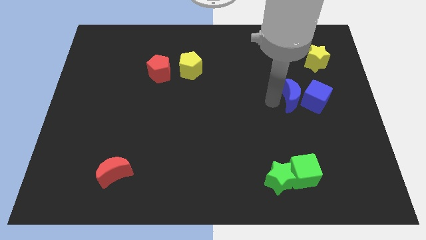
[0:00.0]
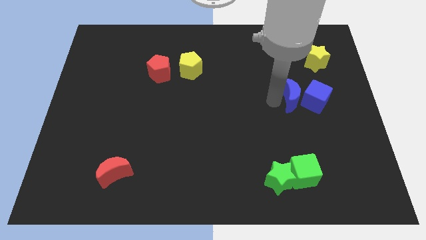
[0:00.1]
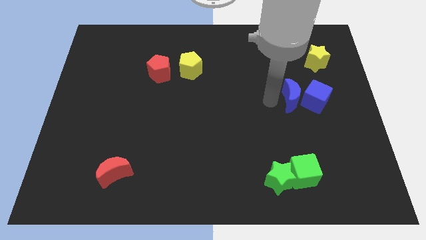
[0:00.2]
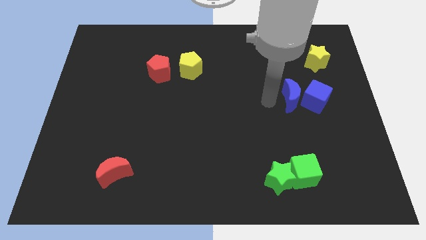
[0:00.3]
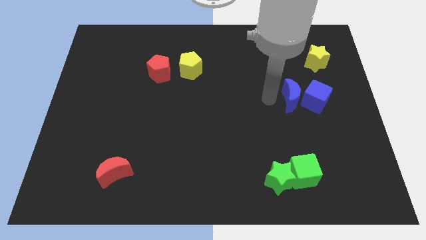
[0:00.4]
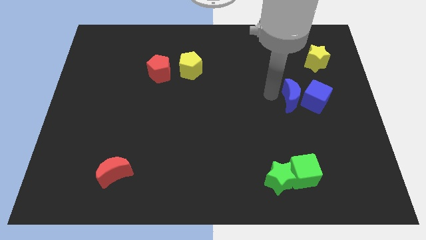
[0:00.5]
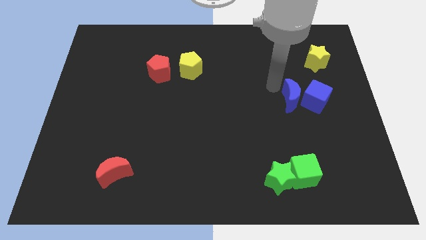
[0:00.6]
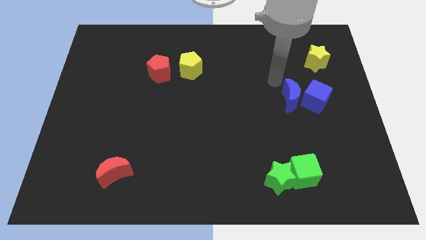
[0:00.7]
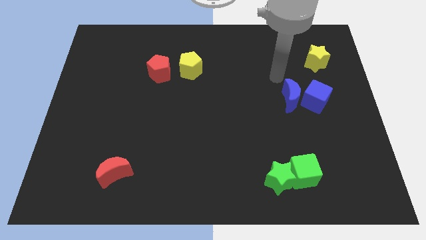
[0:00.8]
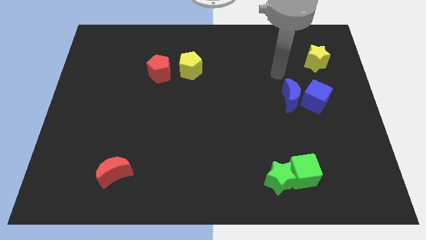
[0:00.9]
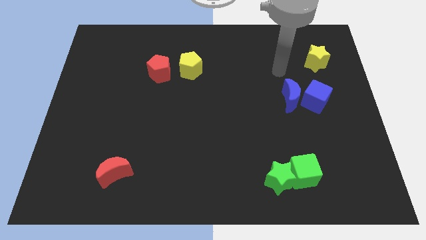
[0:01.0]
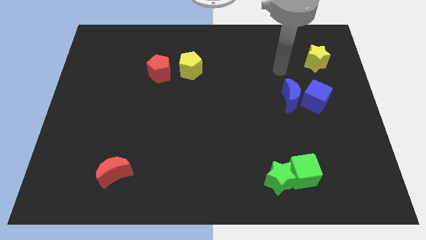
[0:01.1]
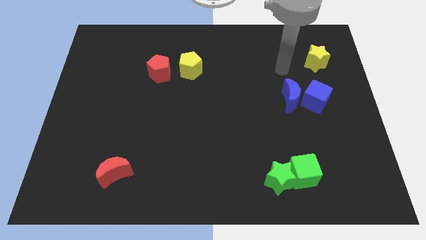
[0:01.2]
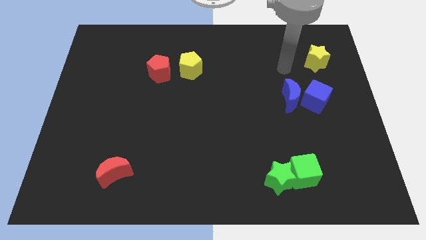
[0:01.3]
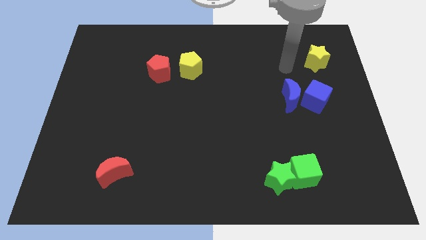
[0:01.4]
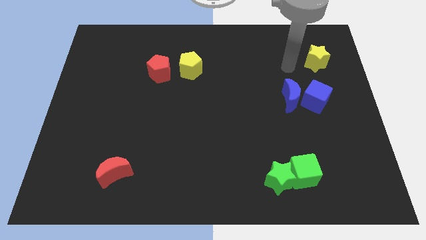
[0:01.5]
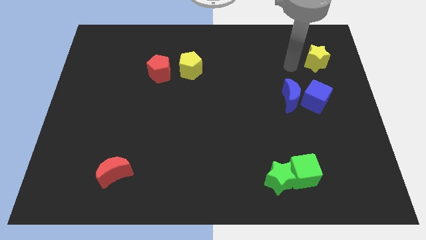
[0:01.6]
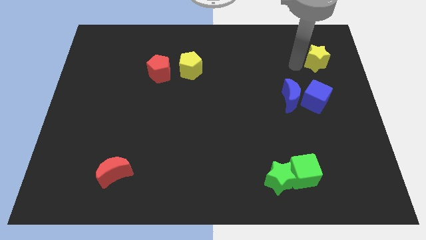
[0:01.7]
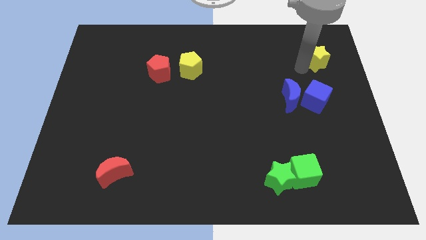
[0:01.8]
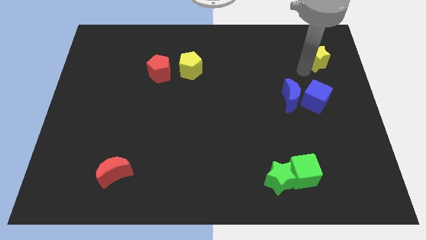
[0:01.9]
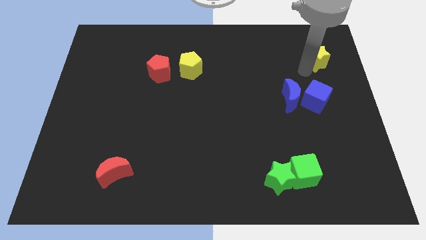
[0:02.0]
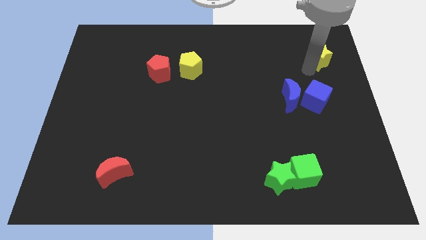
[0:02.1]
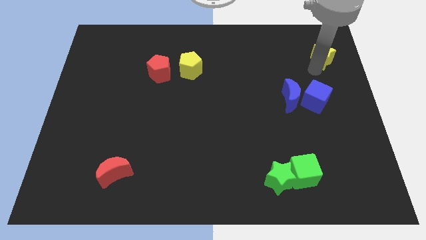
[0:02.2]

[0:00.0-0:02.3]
place your arm below yellow star

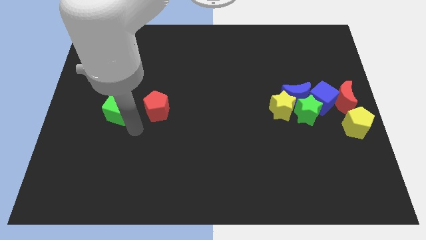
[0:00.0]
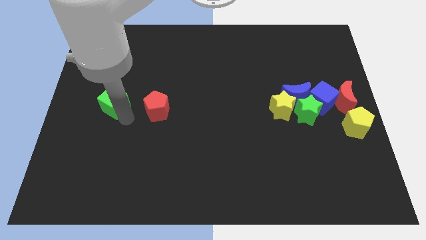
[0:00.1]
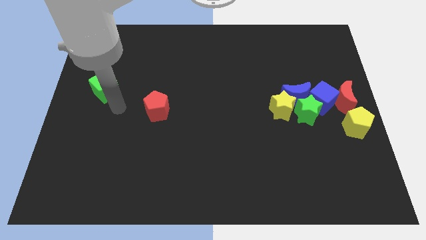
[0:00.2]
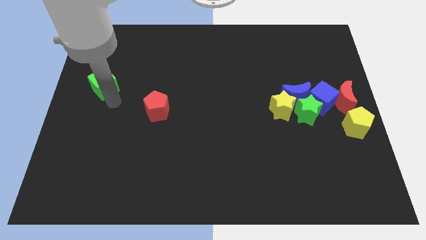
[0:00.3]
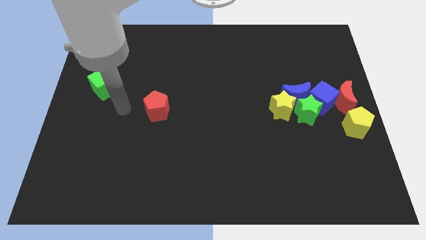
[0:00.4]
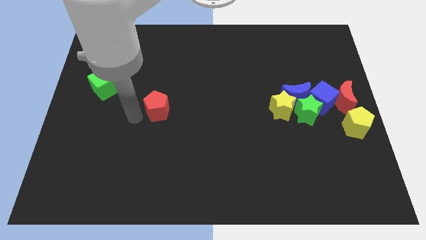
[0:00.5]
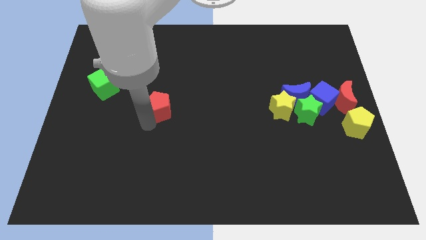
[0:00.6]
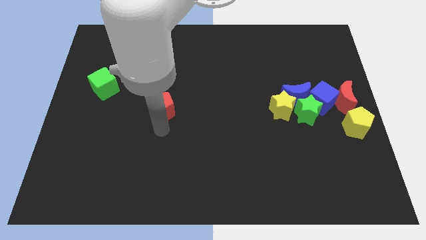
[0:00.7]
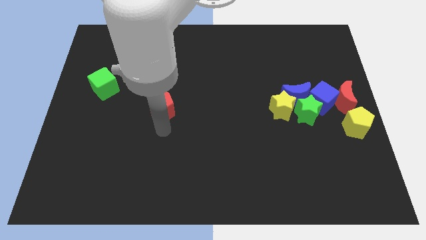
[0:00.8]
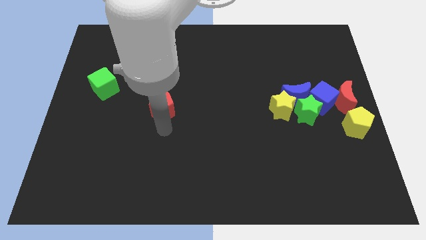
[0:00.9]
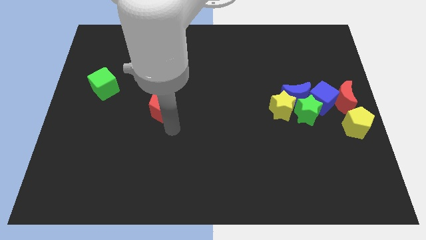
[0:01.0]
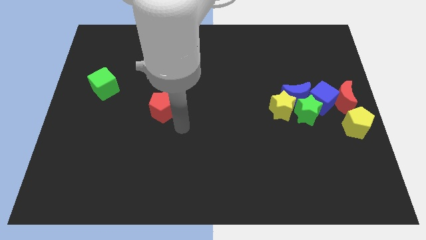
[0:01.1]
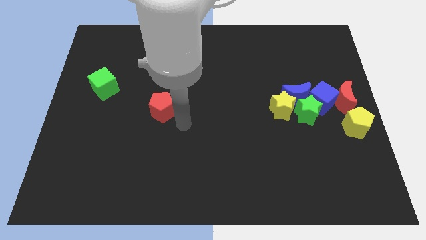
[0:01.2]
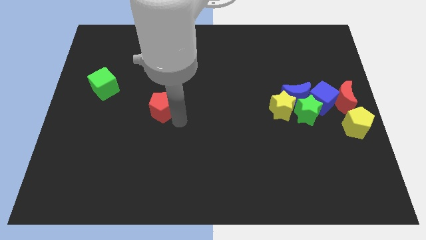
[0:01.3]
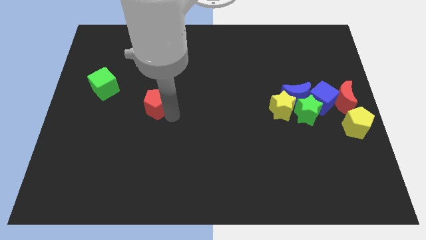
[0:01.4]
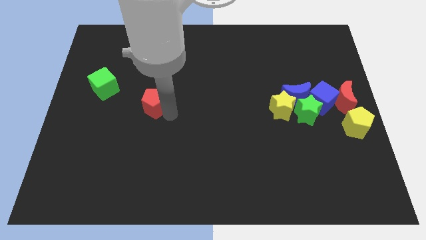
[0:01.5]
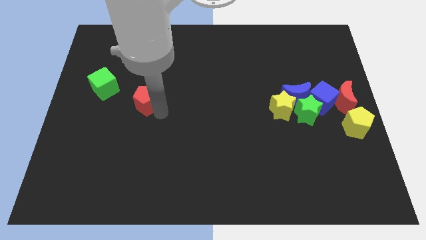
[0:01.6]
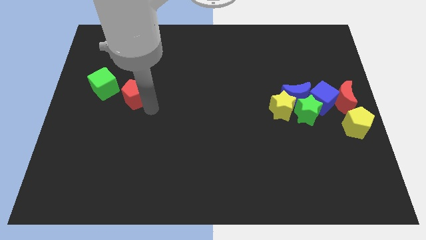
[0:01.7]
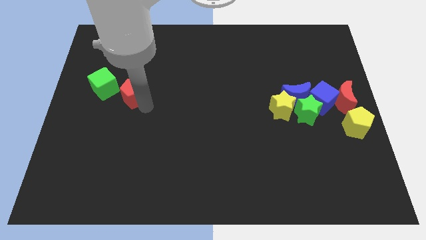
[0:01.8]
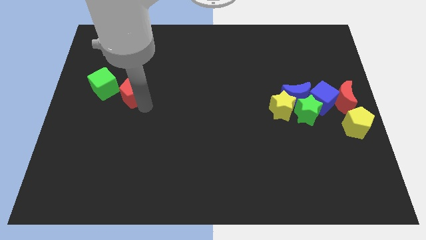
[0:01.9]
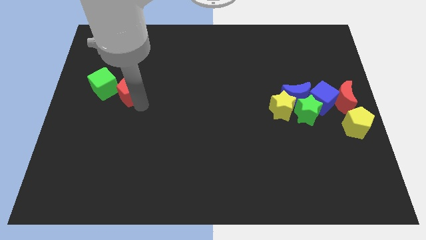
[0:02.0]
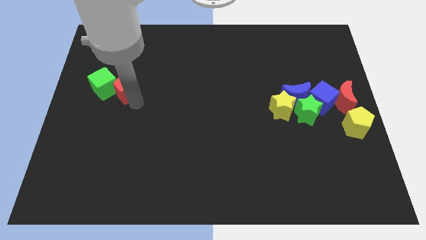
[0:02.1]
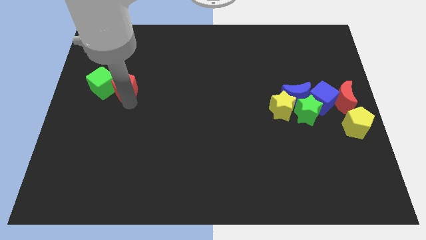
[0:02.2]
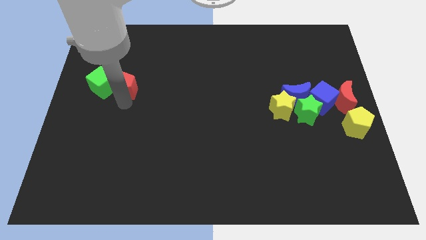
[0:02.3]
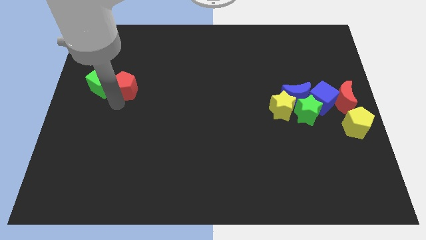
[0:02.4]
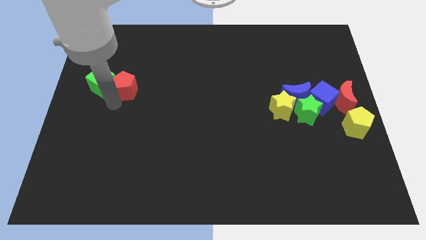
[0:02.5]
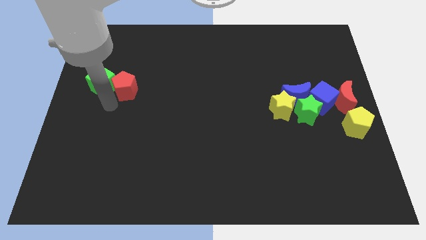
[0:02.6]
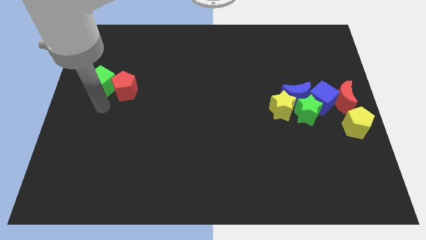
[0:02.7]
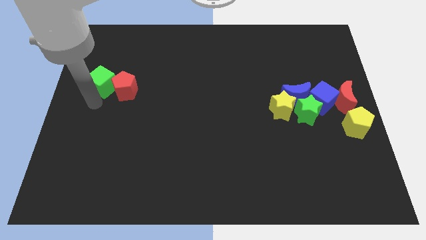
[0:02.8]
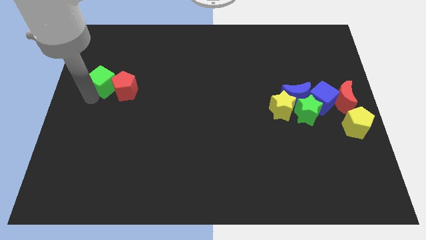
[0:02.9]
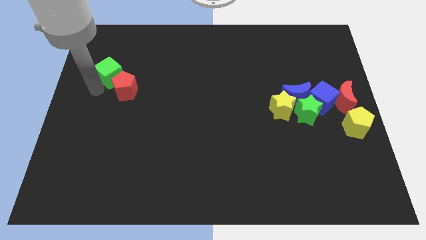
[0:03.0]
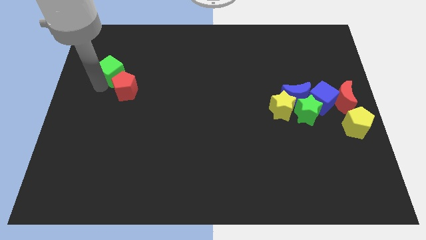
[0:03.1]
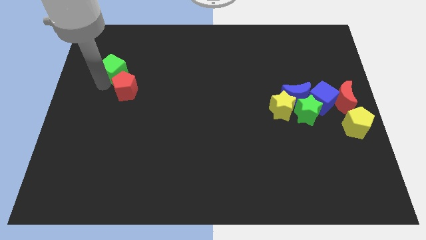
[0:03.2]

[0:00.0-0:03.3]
push the red pentagon next to the green cube

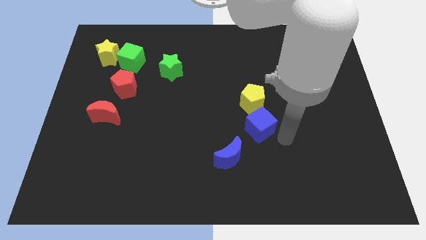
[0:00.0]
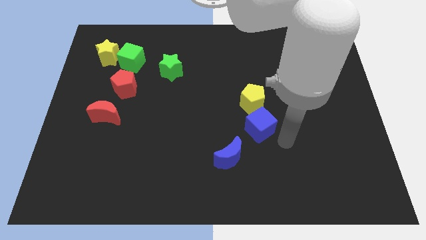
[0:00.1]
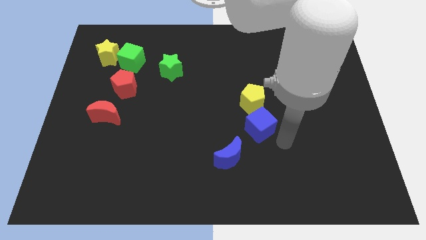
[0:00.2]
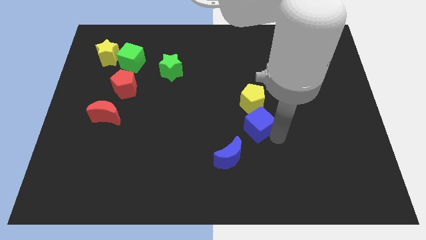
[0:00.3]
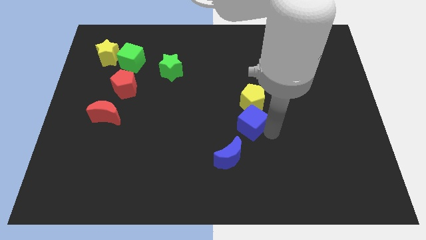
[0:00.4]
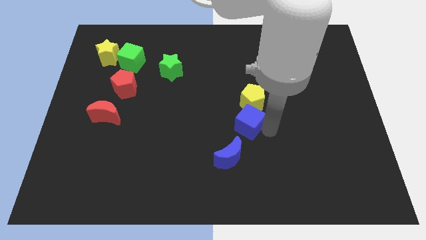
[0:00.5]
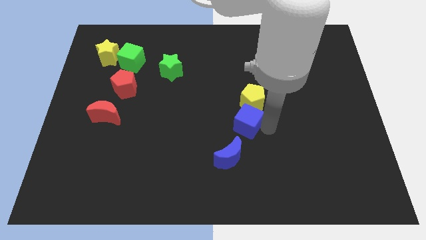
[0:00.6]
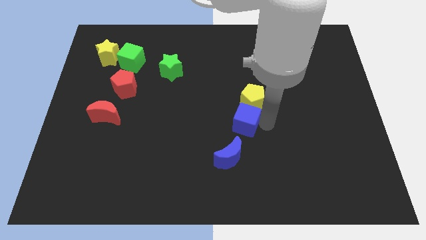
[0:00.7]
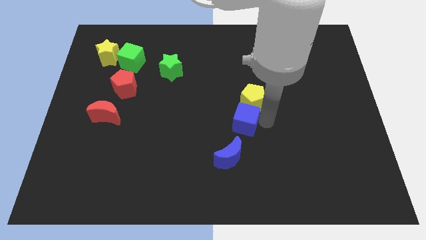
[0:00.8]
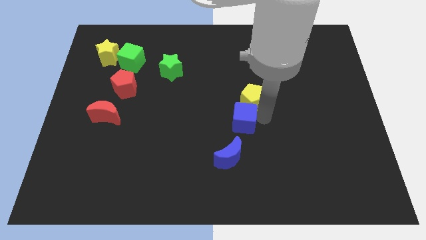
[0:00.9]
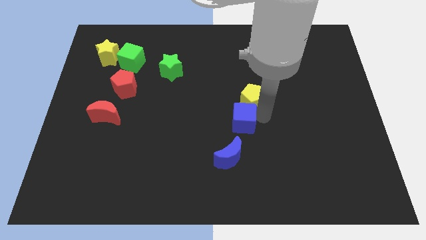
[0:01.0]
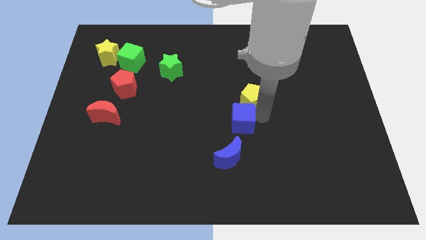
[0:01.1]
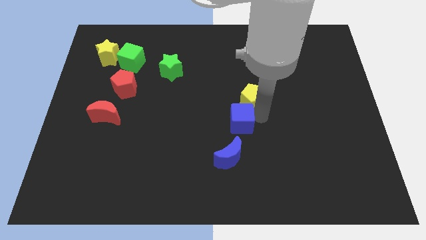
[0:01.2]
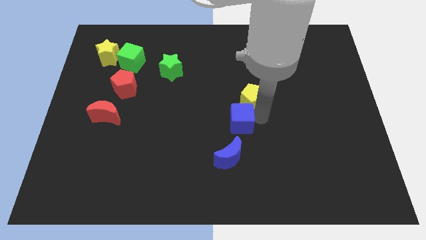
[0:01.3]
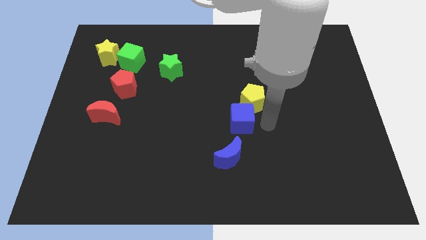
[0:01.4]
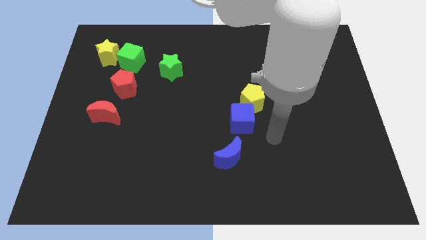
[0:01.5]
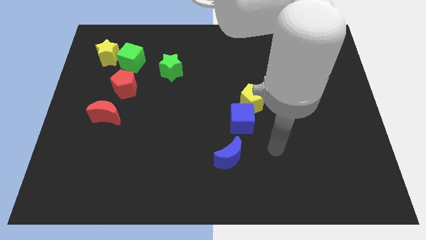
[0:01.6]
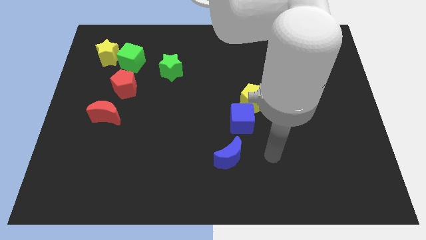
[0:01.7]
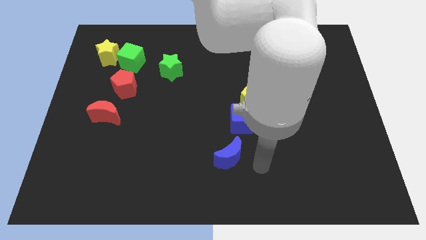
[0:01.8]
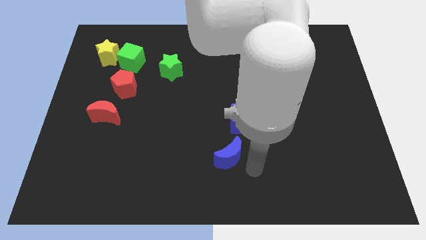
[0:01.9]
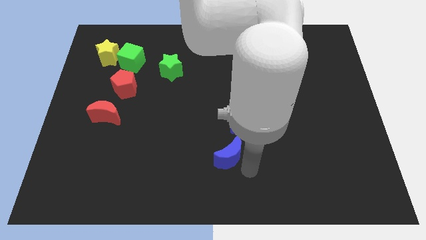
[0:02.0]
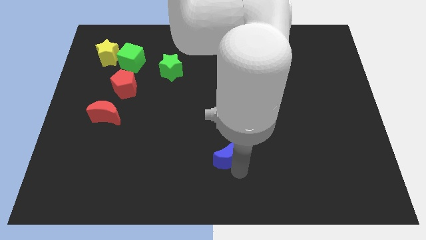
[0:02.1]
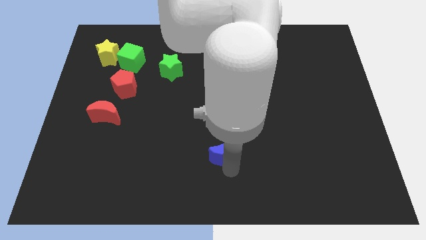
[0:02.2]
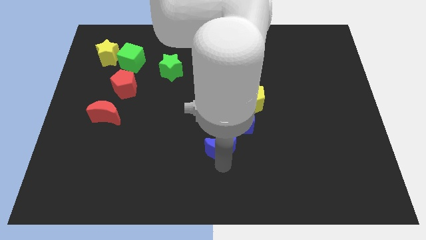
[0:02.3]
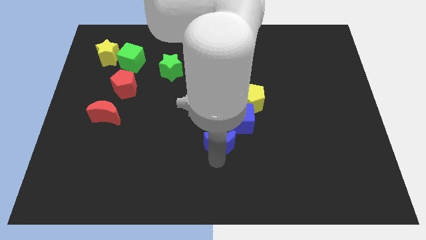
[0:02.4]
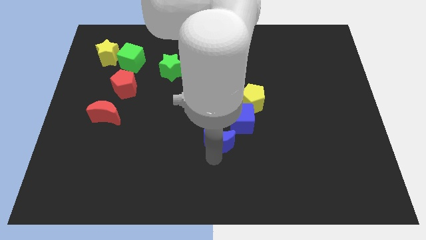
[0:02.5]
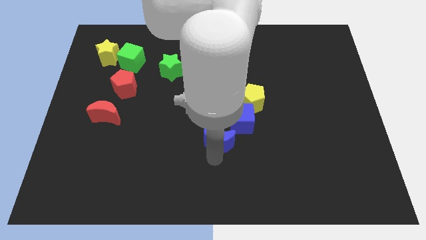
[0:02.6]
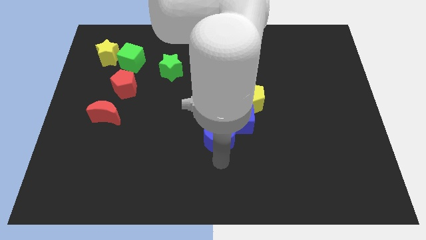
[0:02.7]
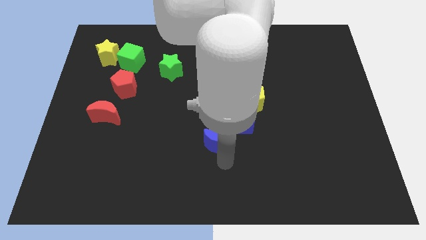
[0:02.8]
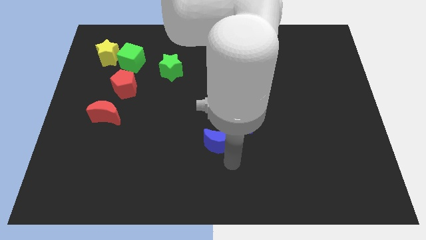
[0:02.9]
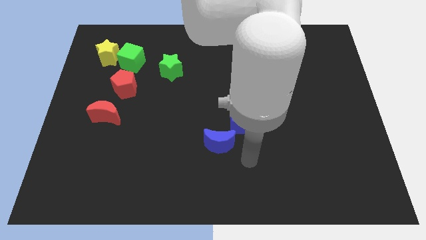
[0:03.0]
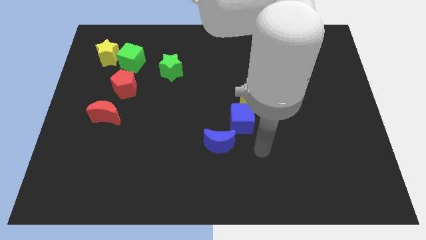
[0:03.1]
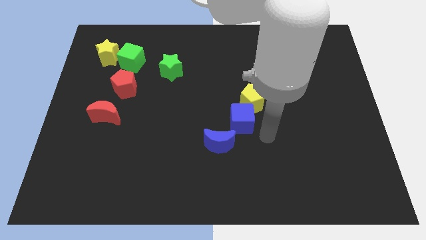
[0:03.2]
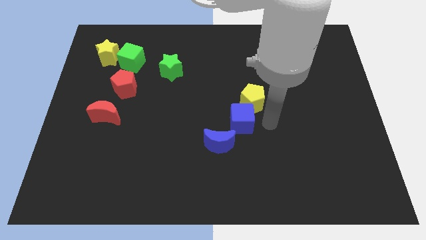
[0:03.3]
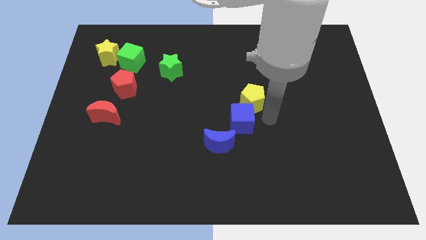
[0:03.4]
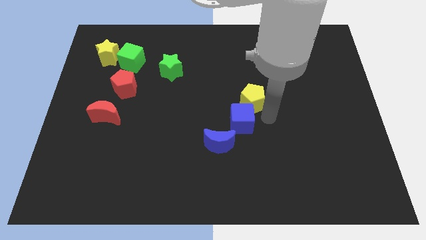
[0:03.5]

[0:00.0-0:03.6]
place the blue cube with blue crescent diagonally the yellow pentagon
